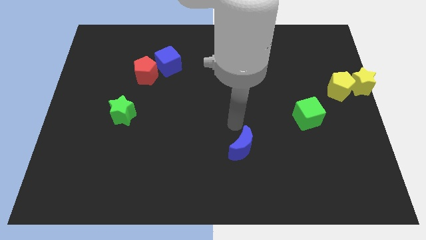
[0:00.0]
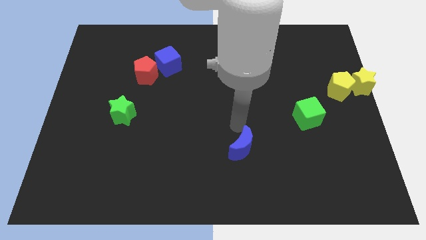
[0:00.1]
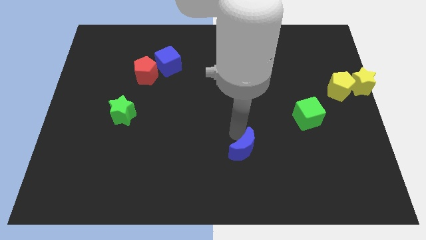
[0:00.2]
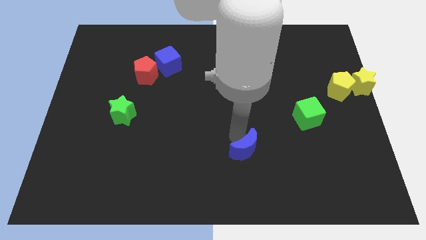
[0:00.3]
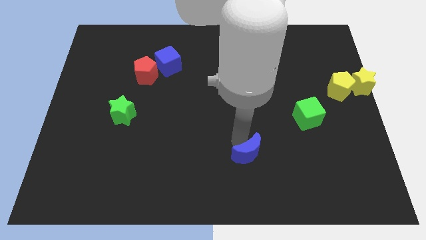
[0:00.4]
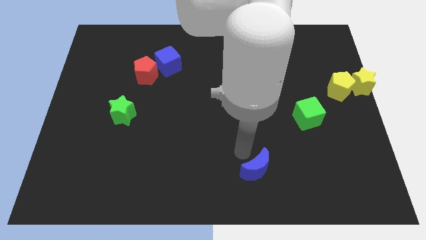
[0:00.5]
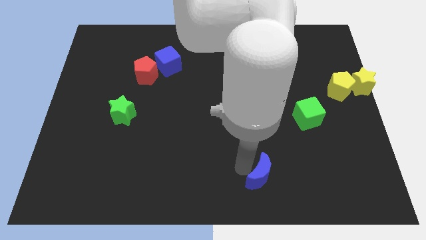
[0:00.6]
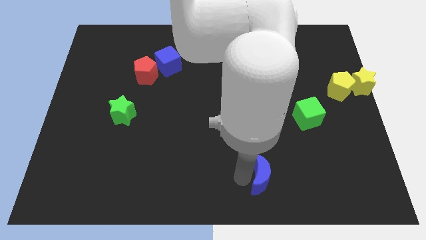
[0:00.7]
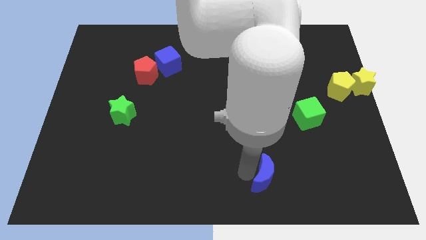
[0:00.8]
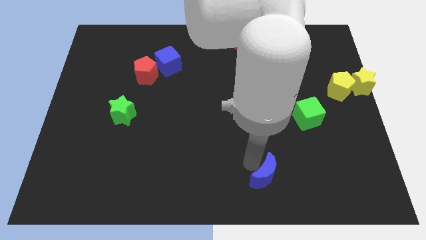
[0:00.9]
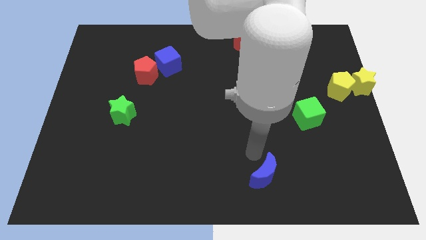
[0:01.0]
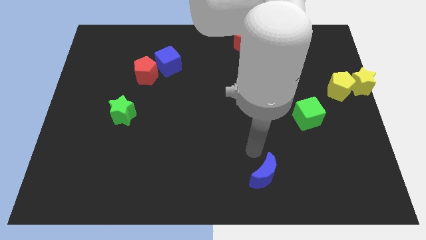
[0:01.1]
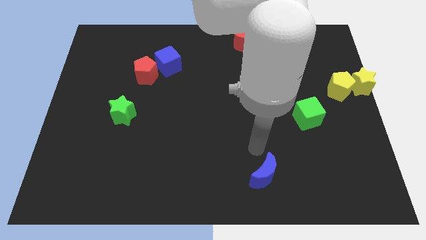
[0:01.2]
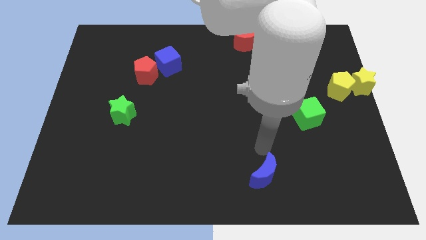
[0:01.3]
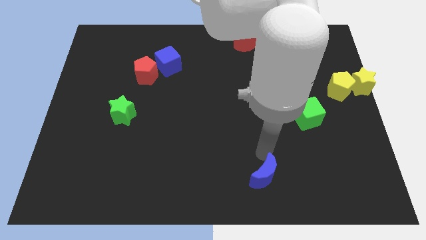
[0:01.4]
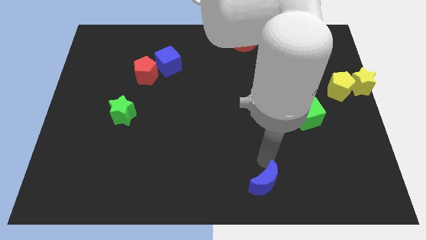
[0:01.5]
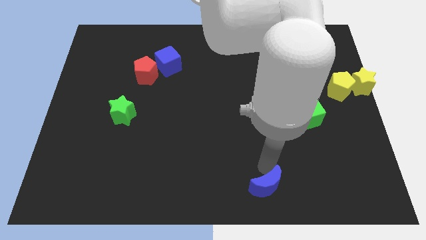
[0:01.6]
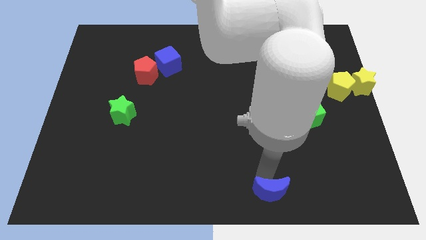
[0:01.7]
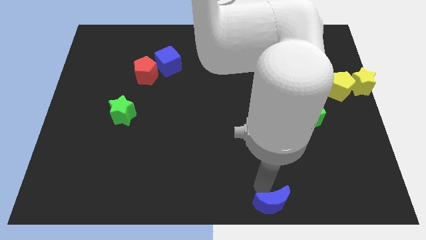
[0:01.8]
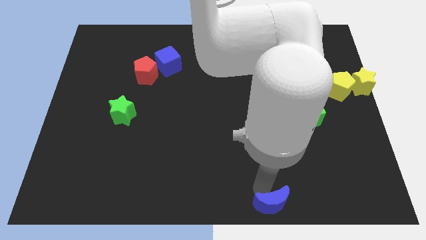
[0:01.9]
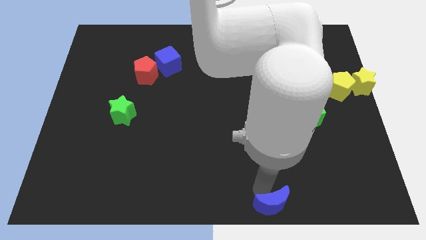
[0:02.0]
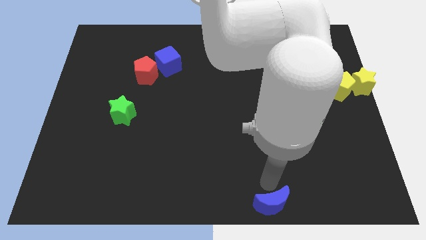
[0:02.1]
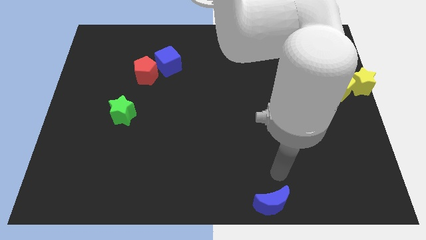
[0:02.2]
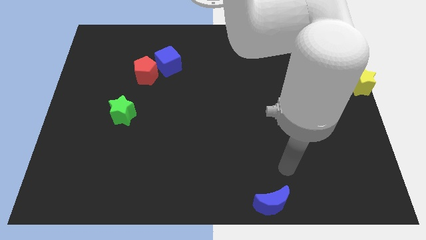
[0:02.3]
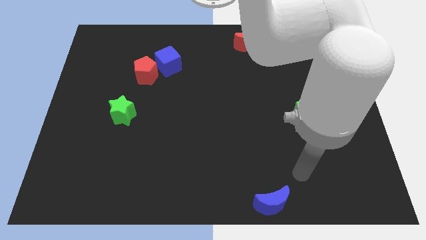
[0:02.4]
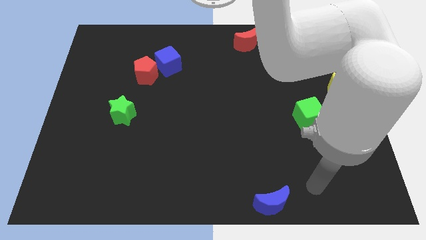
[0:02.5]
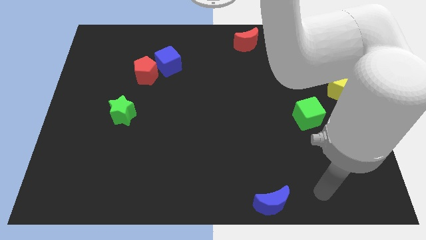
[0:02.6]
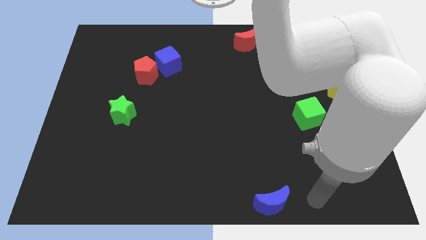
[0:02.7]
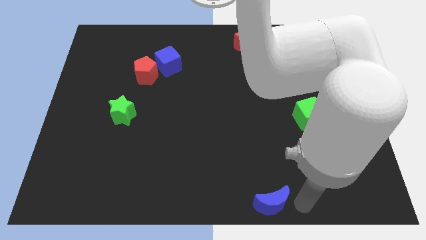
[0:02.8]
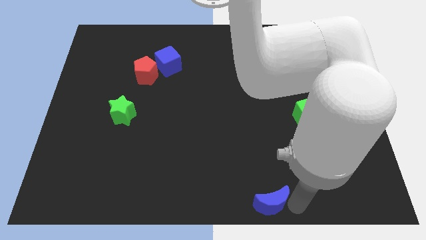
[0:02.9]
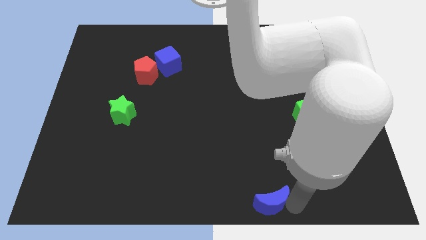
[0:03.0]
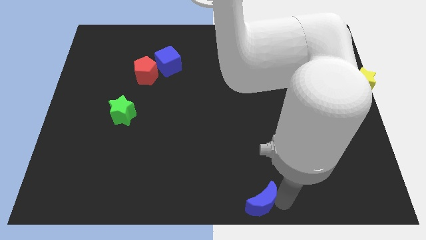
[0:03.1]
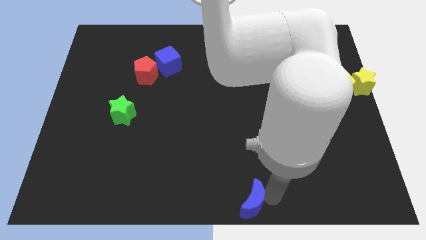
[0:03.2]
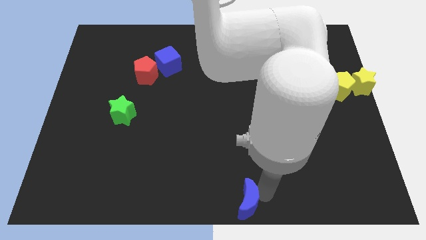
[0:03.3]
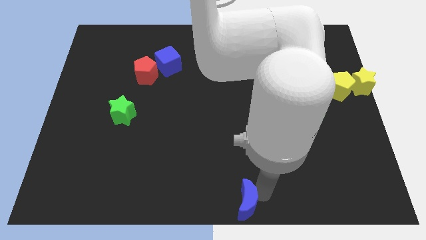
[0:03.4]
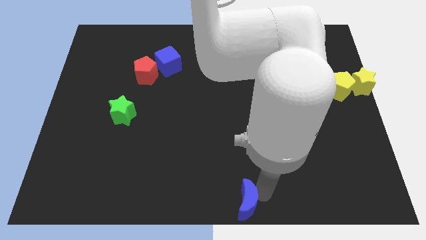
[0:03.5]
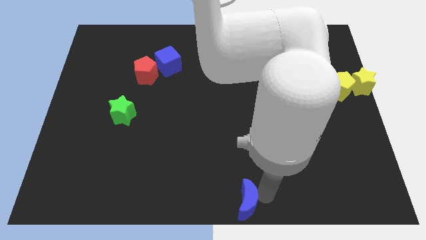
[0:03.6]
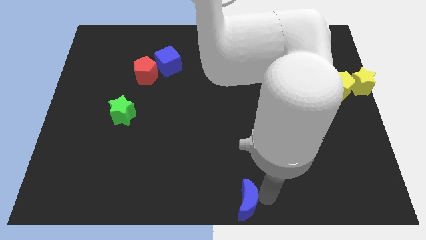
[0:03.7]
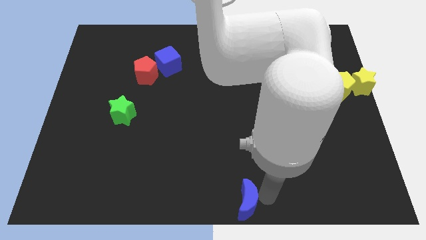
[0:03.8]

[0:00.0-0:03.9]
place the blue crescent at the bottom center

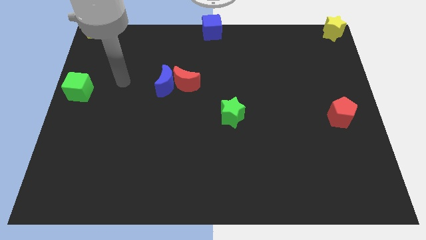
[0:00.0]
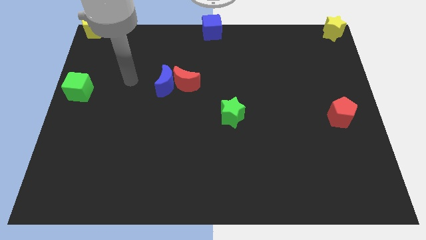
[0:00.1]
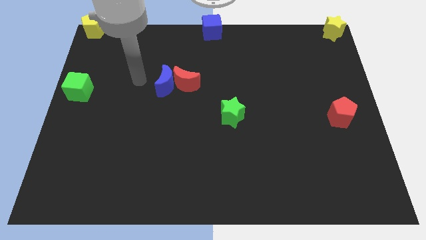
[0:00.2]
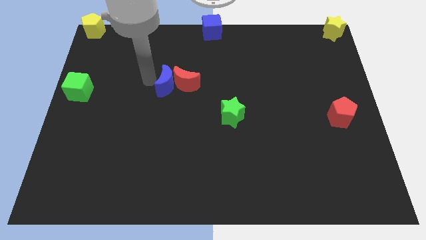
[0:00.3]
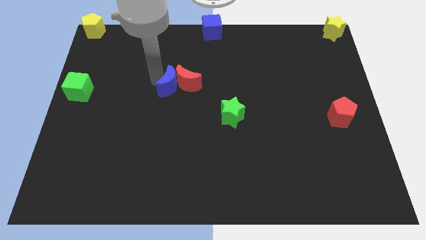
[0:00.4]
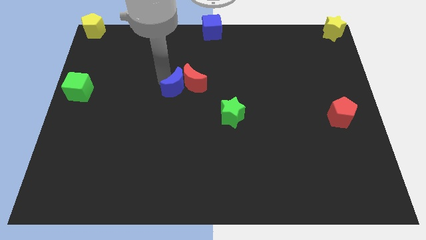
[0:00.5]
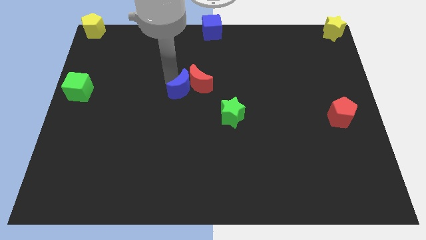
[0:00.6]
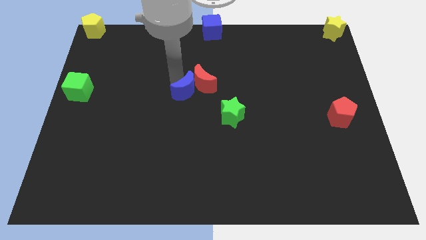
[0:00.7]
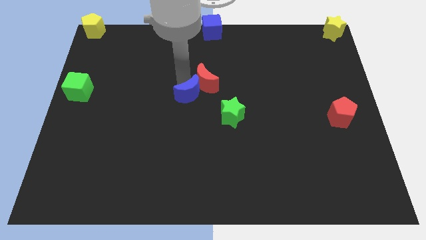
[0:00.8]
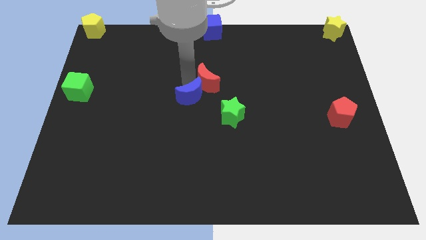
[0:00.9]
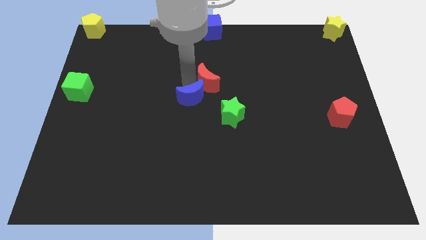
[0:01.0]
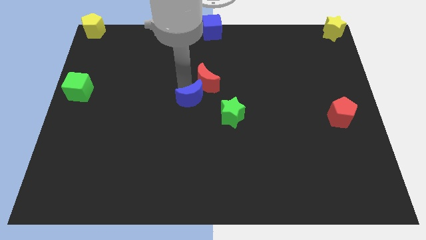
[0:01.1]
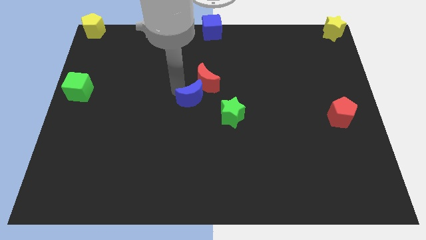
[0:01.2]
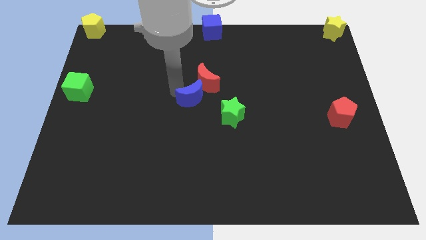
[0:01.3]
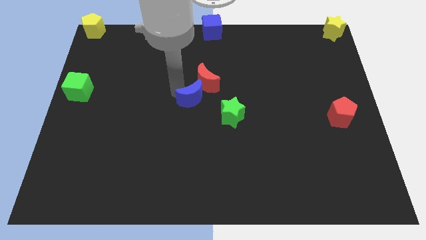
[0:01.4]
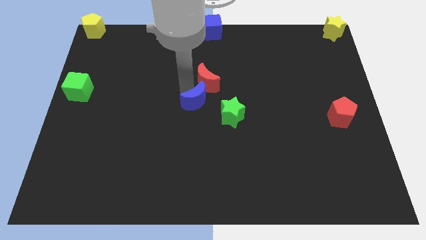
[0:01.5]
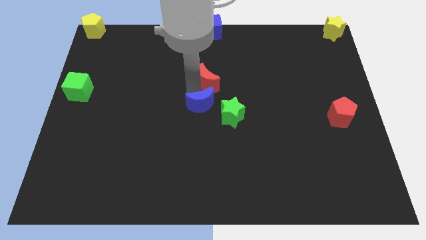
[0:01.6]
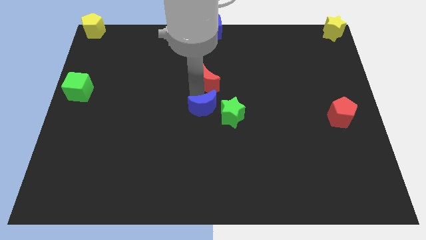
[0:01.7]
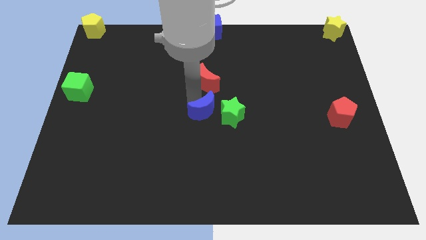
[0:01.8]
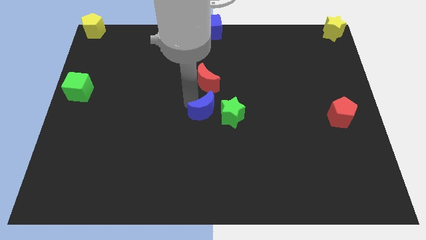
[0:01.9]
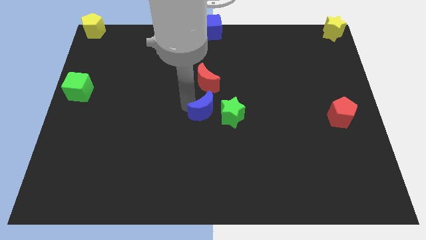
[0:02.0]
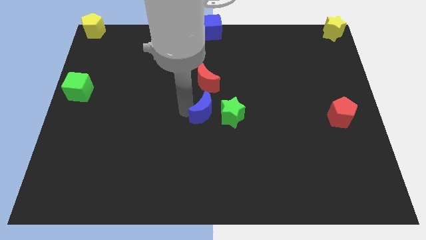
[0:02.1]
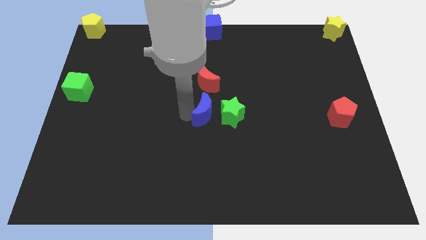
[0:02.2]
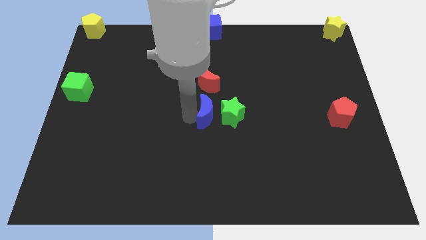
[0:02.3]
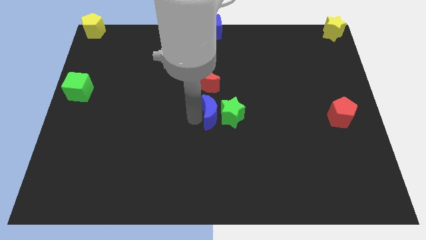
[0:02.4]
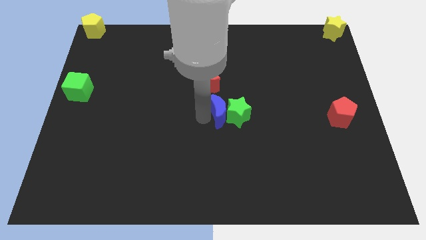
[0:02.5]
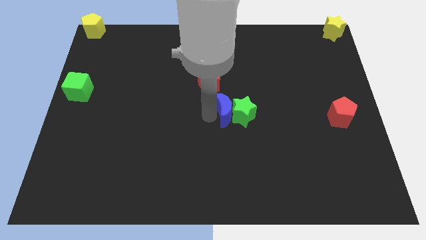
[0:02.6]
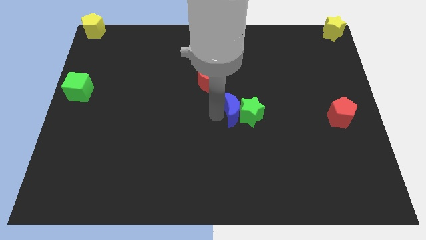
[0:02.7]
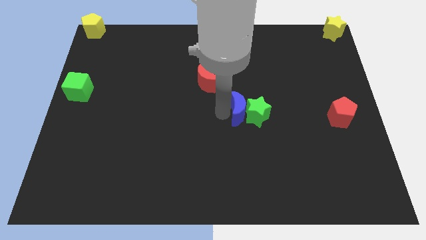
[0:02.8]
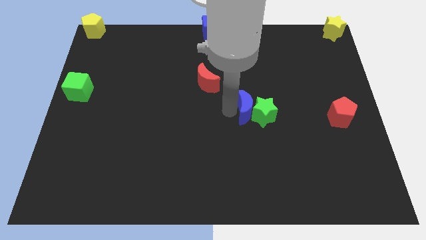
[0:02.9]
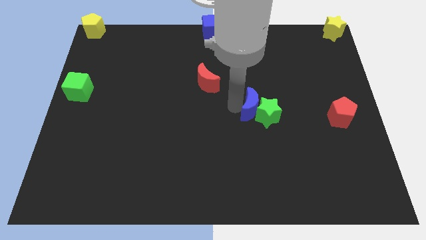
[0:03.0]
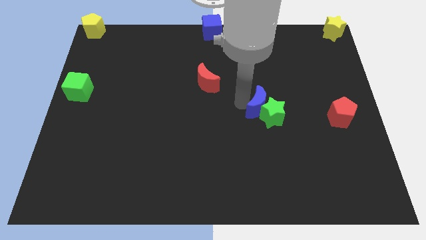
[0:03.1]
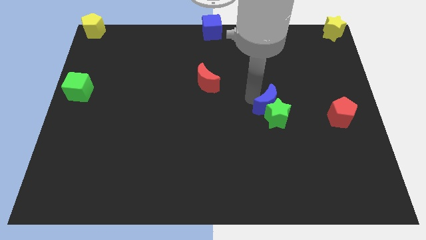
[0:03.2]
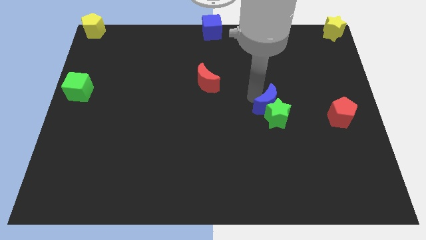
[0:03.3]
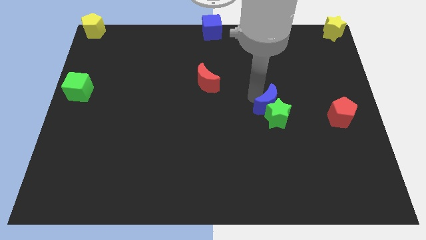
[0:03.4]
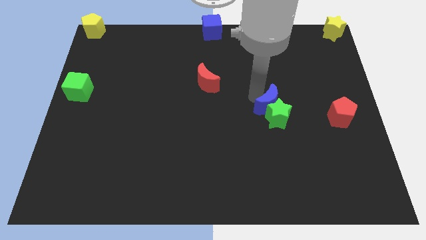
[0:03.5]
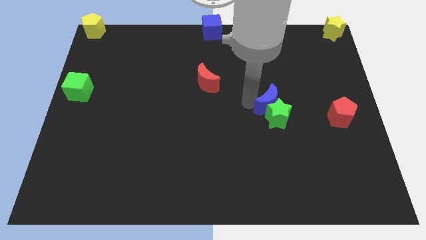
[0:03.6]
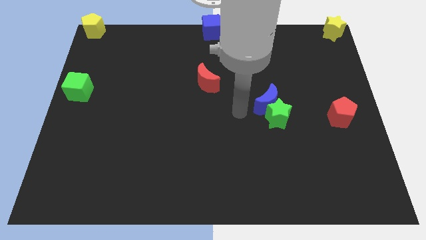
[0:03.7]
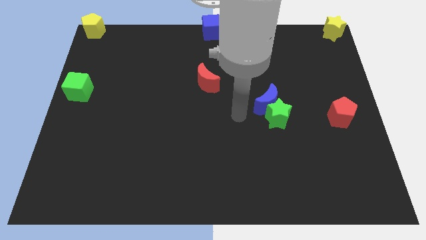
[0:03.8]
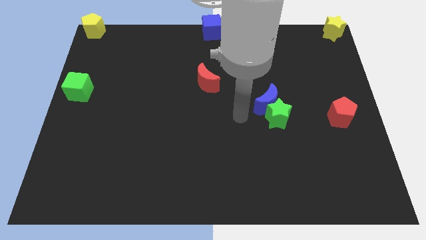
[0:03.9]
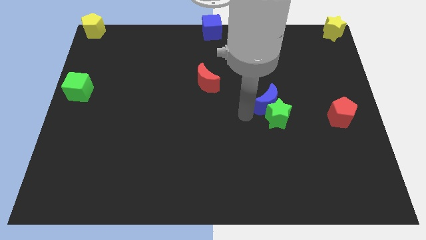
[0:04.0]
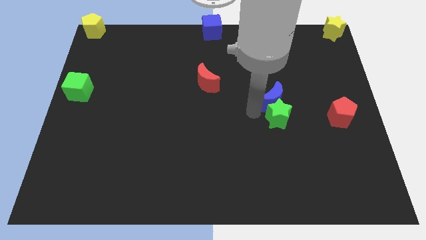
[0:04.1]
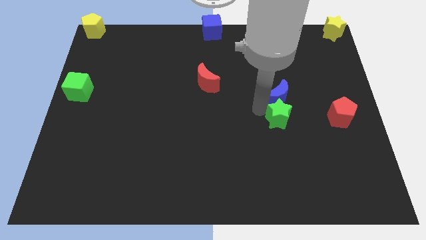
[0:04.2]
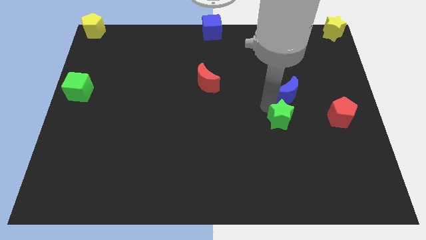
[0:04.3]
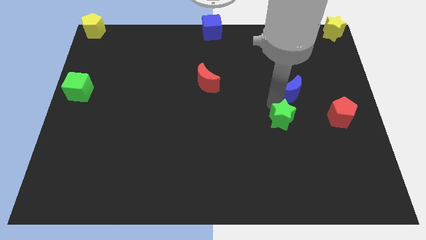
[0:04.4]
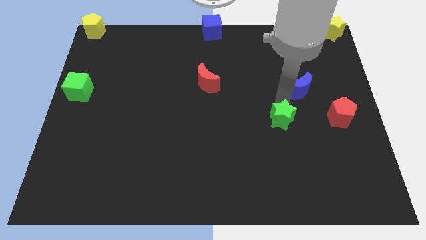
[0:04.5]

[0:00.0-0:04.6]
separate red moon and blue moon

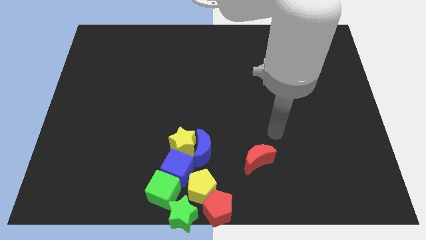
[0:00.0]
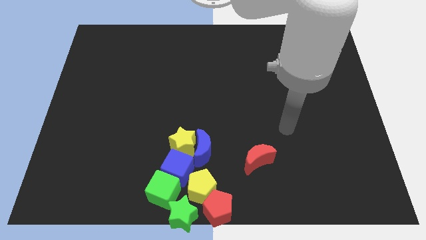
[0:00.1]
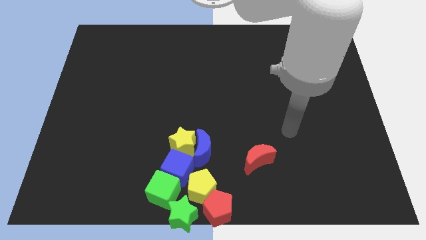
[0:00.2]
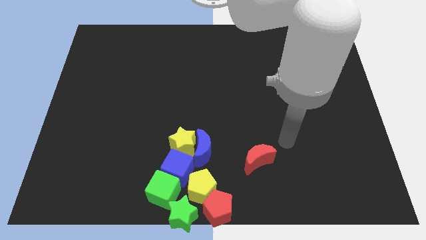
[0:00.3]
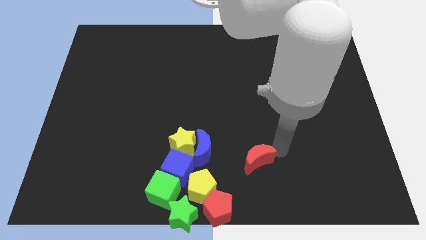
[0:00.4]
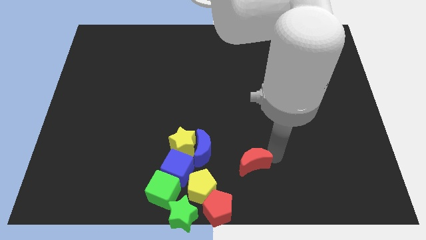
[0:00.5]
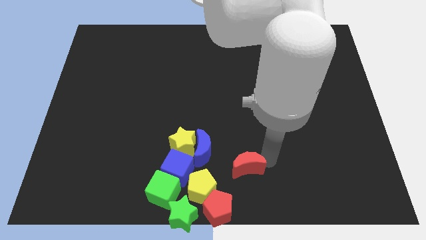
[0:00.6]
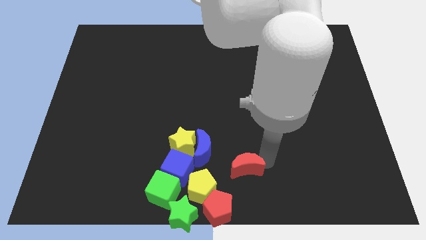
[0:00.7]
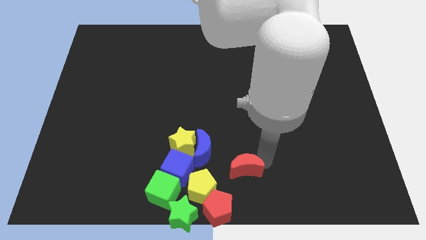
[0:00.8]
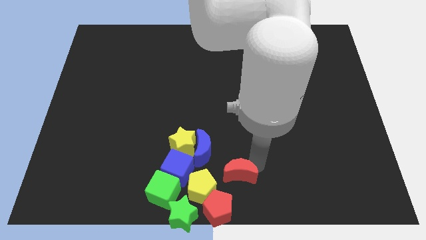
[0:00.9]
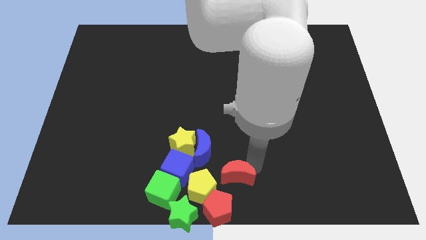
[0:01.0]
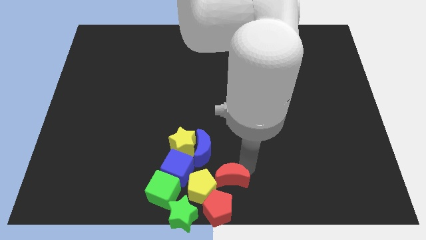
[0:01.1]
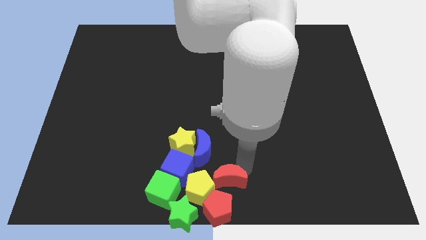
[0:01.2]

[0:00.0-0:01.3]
place the red moon above the red pentagon
